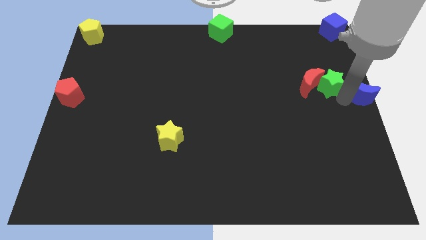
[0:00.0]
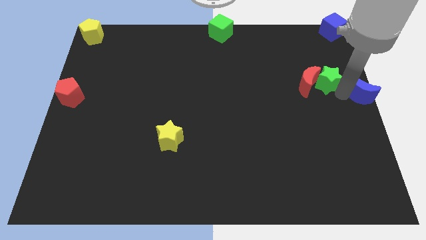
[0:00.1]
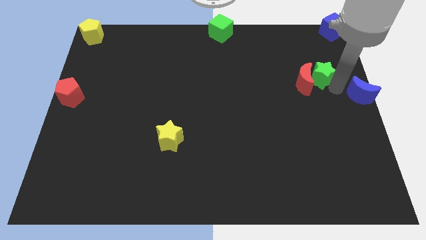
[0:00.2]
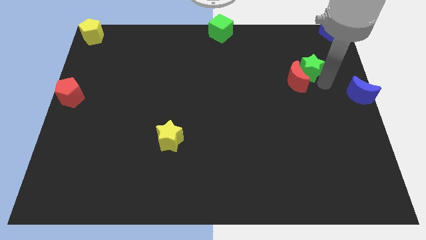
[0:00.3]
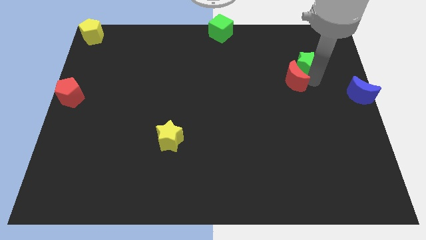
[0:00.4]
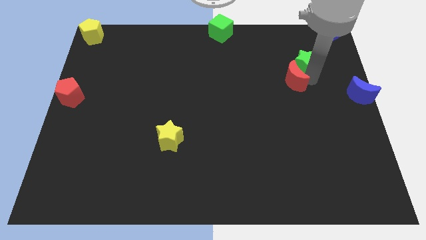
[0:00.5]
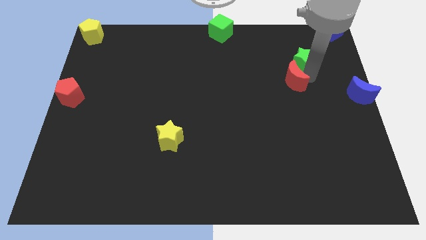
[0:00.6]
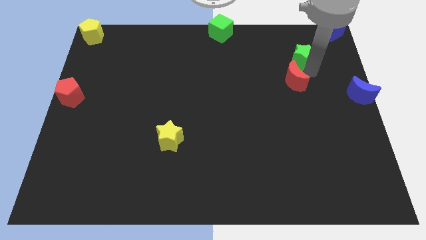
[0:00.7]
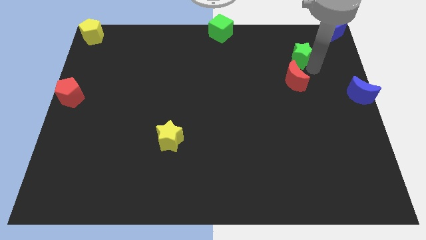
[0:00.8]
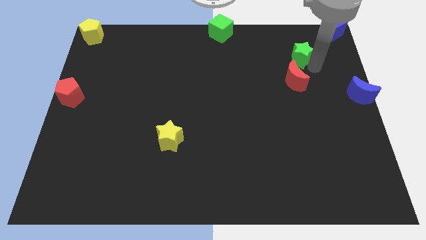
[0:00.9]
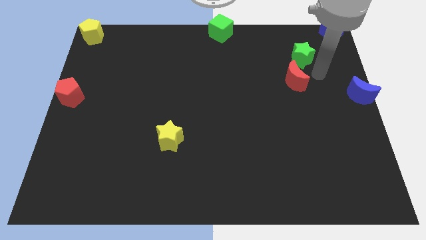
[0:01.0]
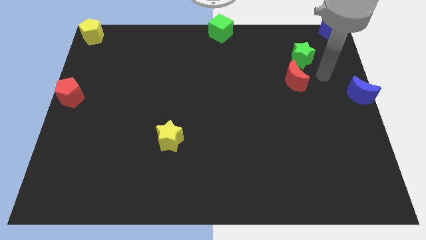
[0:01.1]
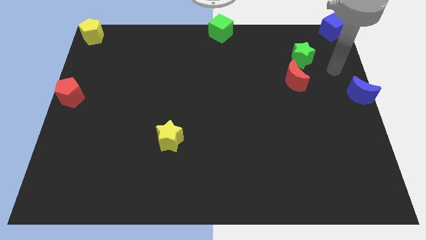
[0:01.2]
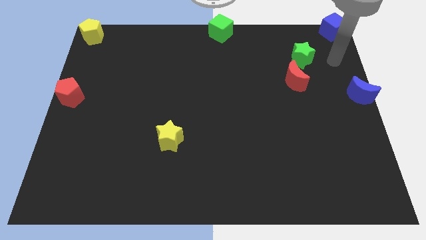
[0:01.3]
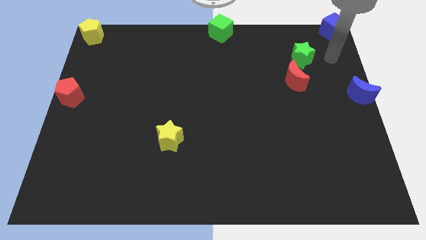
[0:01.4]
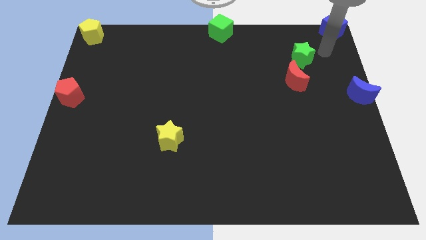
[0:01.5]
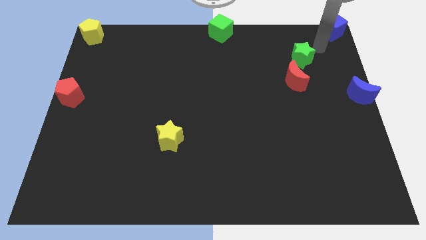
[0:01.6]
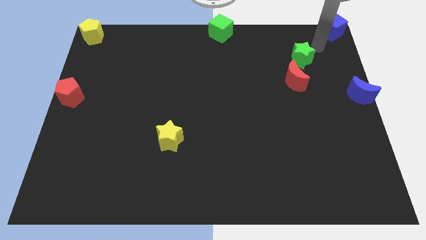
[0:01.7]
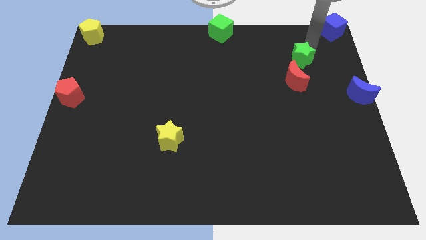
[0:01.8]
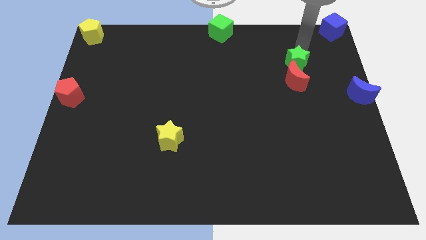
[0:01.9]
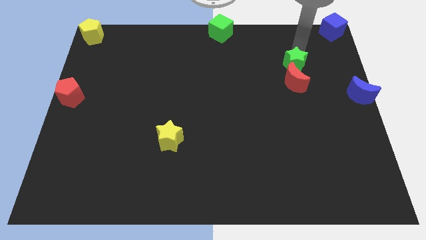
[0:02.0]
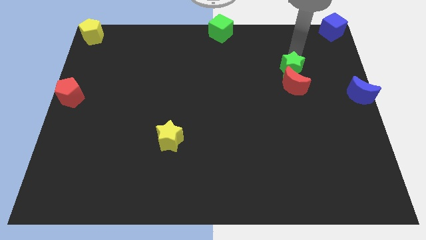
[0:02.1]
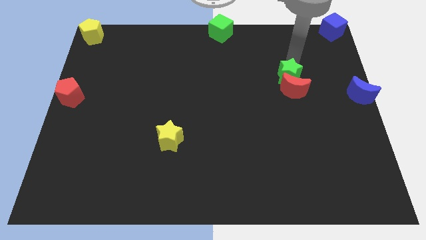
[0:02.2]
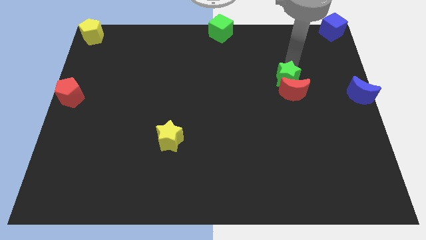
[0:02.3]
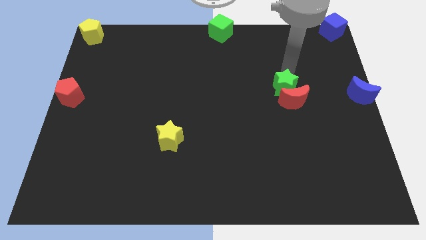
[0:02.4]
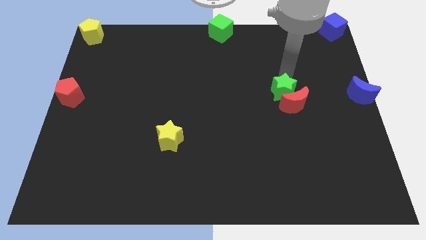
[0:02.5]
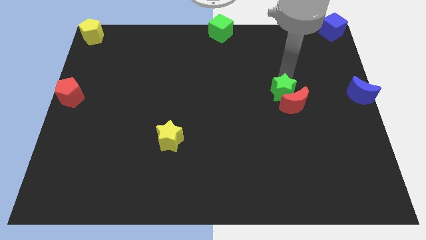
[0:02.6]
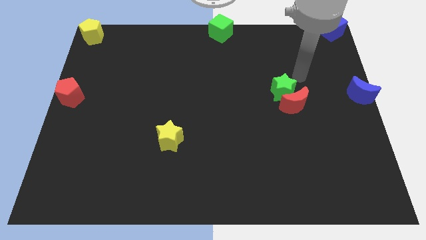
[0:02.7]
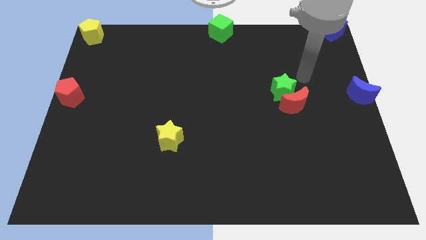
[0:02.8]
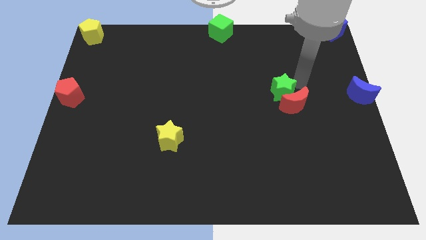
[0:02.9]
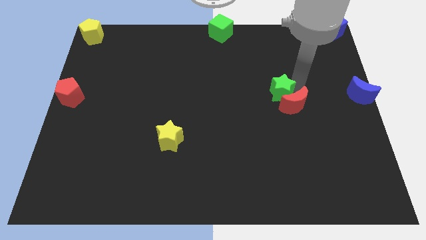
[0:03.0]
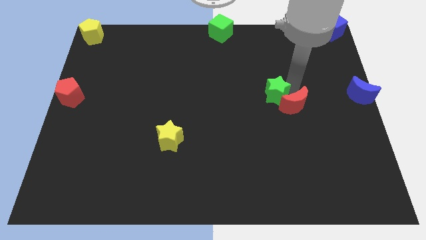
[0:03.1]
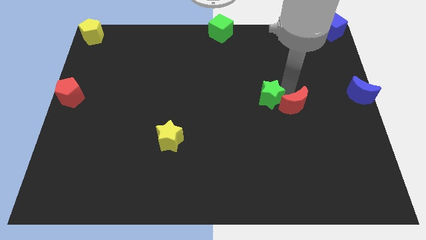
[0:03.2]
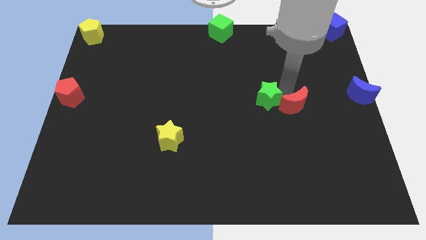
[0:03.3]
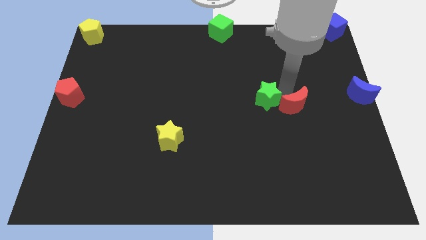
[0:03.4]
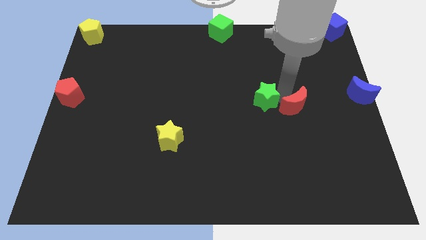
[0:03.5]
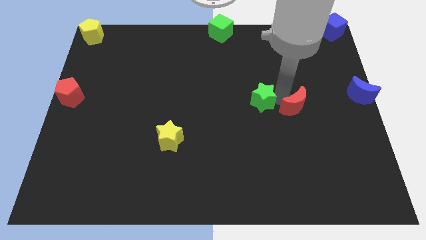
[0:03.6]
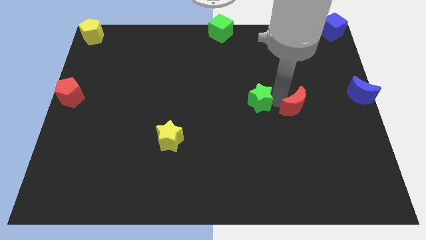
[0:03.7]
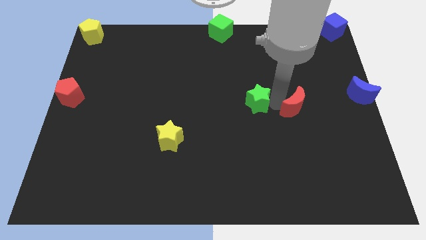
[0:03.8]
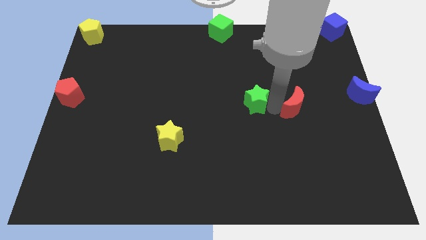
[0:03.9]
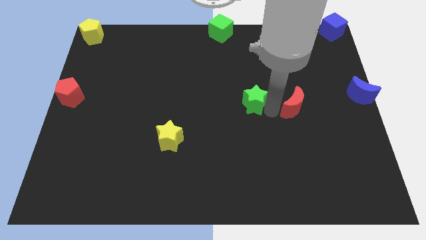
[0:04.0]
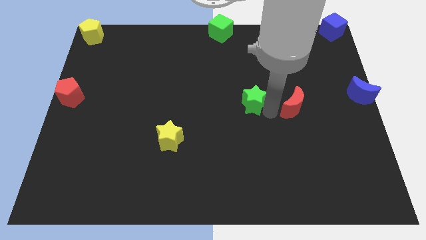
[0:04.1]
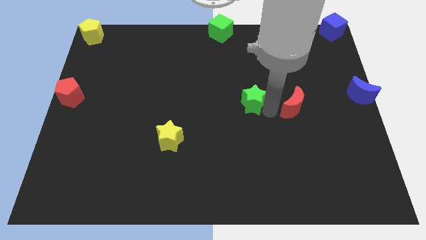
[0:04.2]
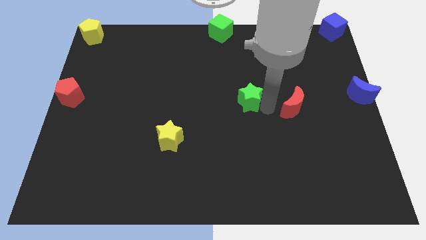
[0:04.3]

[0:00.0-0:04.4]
move the green star to the left side of the red crescent

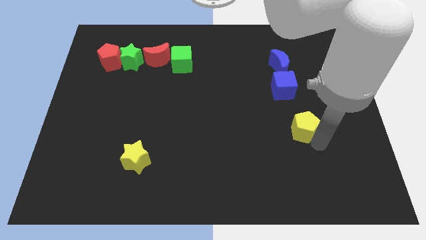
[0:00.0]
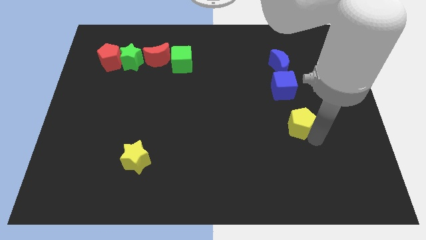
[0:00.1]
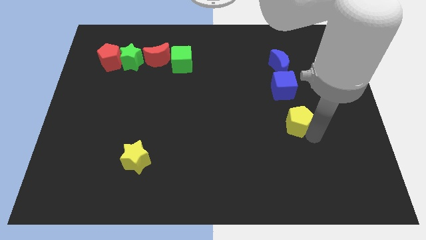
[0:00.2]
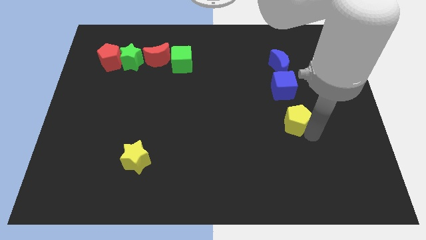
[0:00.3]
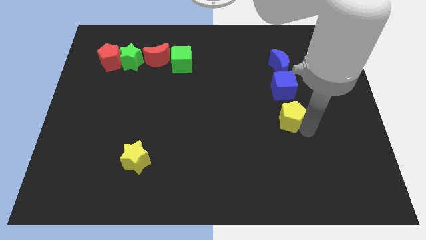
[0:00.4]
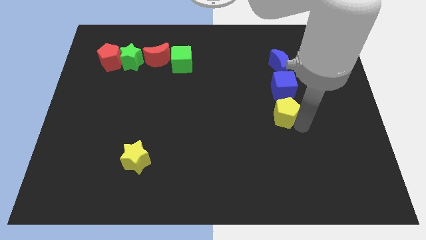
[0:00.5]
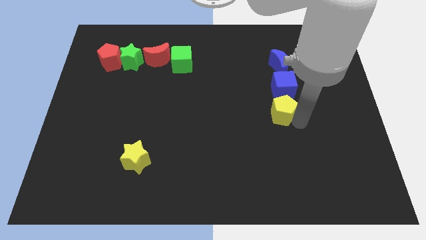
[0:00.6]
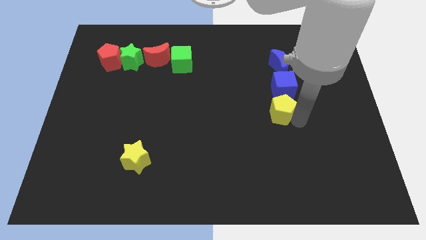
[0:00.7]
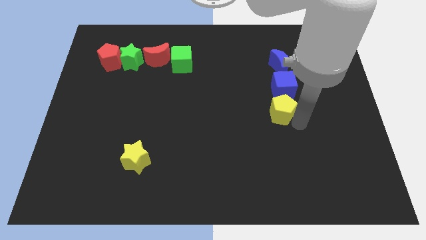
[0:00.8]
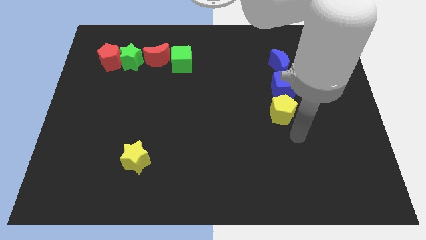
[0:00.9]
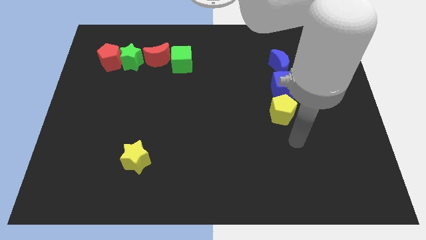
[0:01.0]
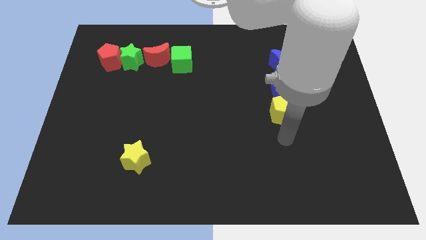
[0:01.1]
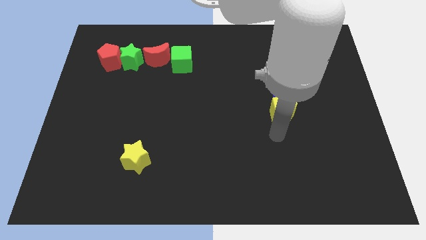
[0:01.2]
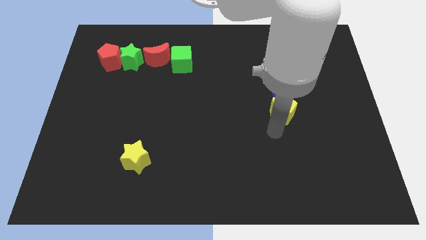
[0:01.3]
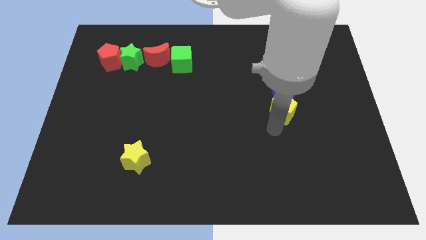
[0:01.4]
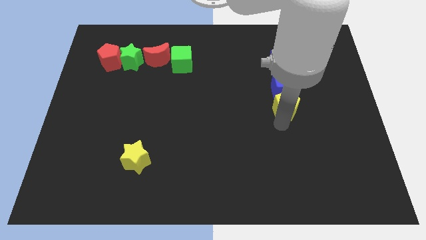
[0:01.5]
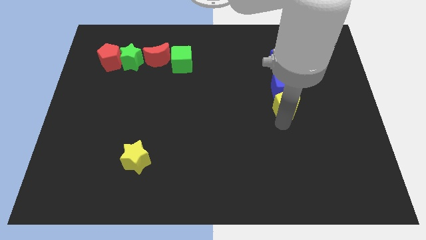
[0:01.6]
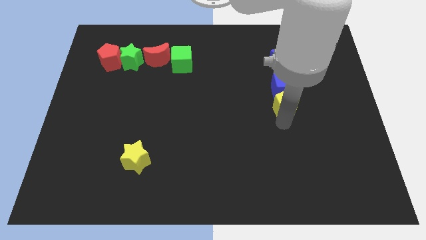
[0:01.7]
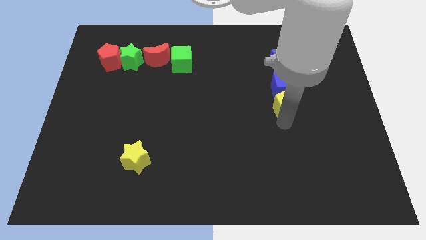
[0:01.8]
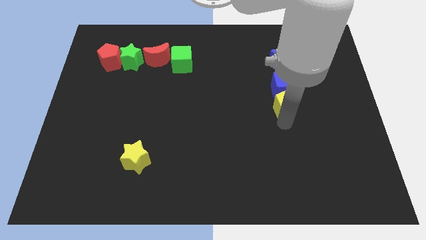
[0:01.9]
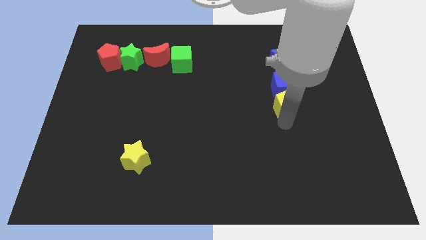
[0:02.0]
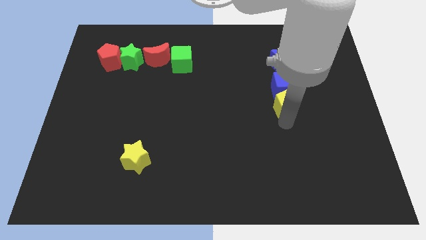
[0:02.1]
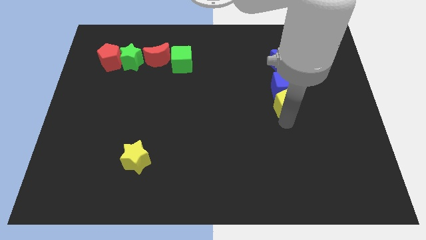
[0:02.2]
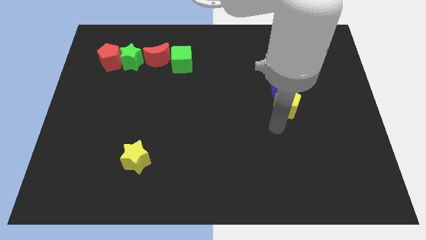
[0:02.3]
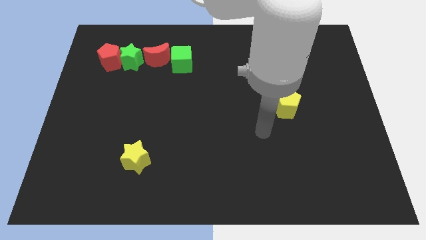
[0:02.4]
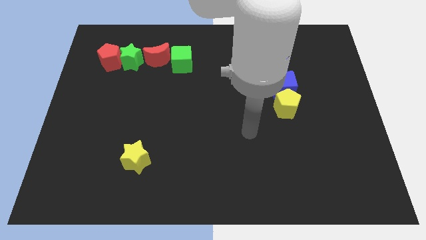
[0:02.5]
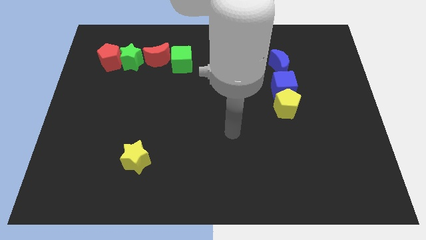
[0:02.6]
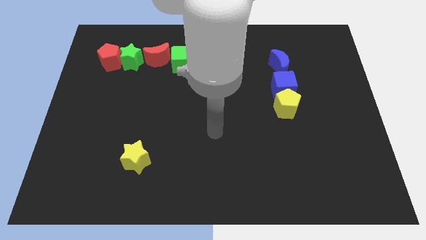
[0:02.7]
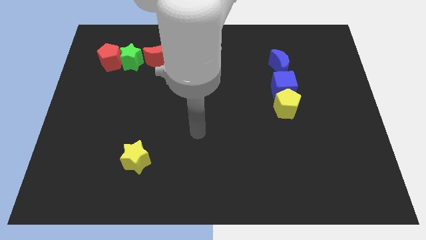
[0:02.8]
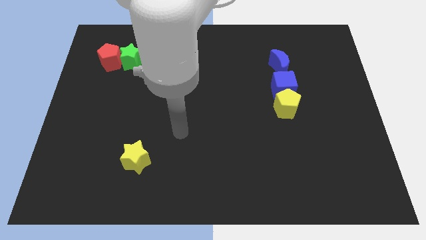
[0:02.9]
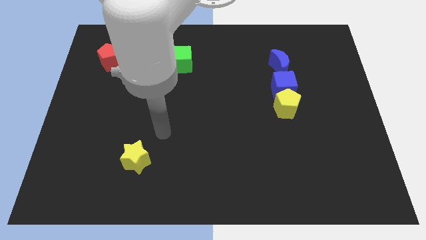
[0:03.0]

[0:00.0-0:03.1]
move yellow pentagon close to the blue cube

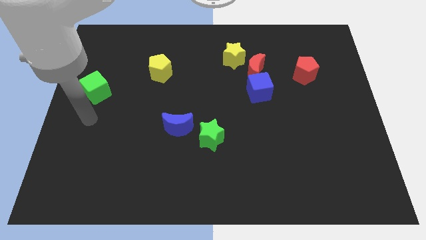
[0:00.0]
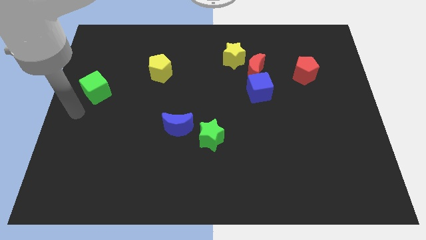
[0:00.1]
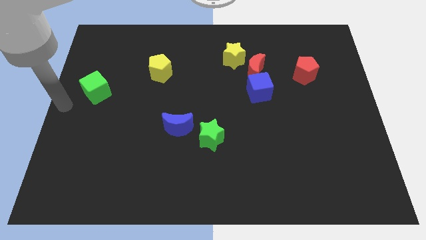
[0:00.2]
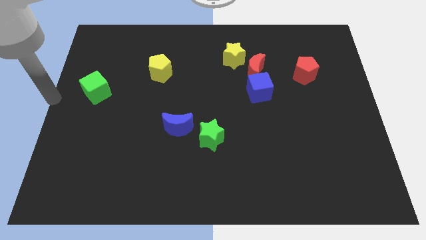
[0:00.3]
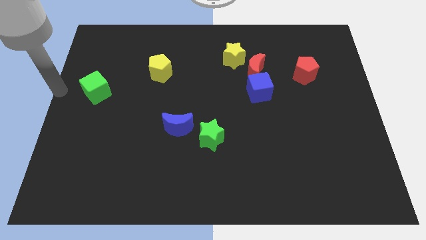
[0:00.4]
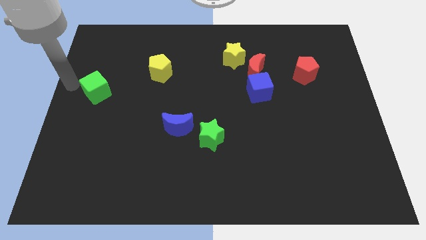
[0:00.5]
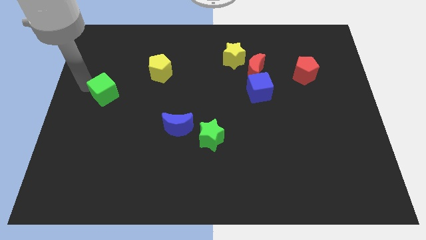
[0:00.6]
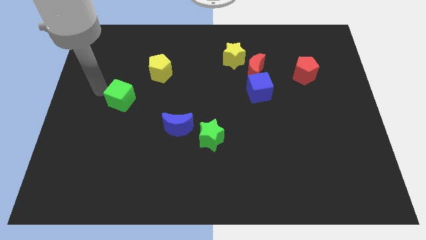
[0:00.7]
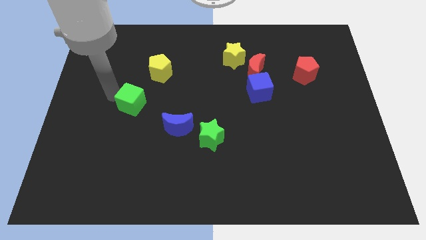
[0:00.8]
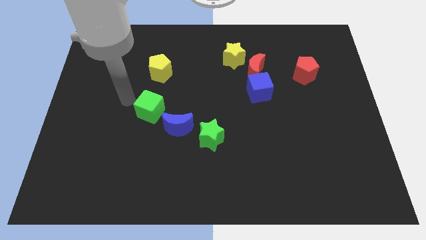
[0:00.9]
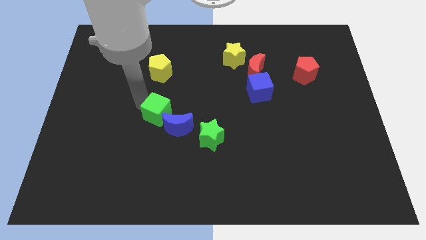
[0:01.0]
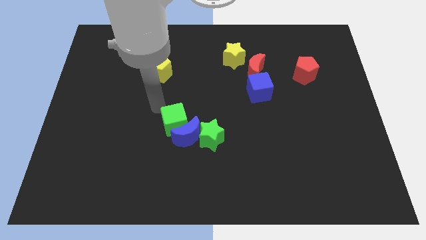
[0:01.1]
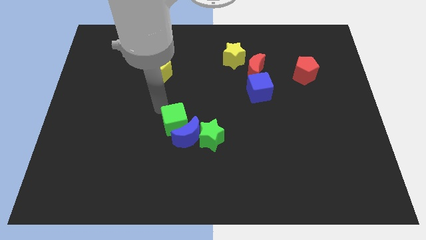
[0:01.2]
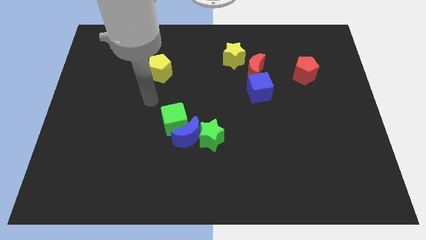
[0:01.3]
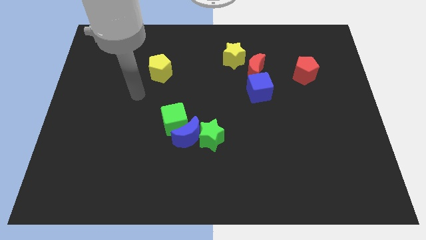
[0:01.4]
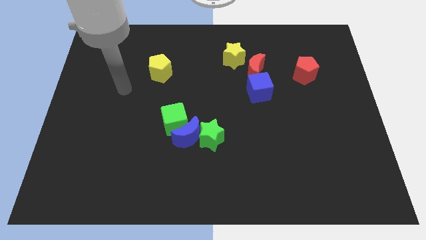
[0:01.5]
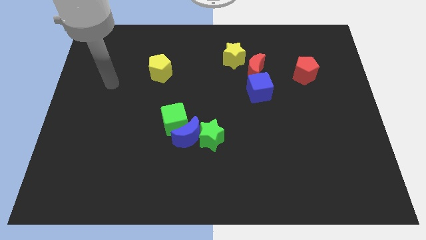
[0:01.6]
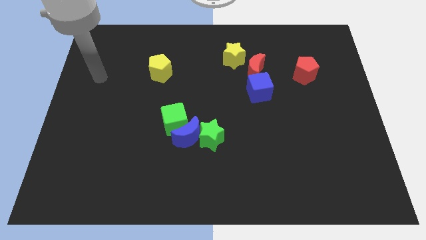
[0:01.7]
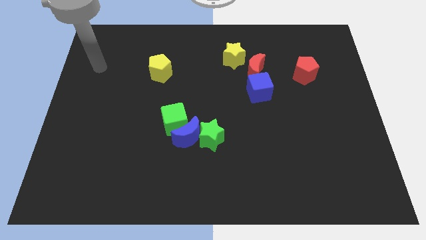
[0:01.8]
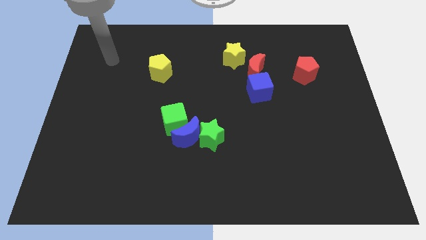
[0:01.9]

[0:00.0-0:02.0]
push the green cube into blue moon at the center
